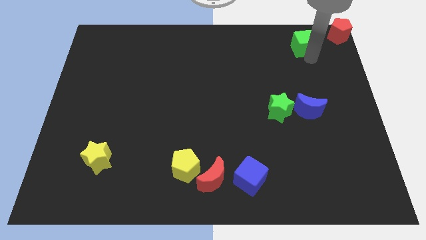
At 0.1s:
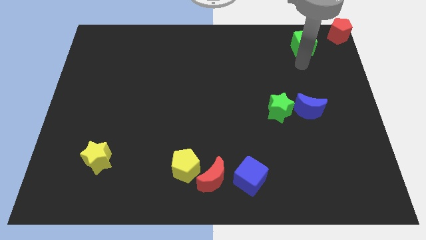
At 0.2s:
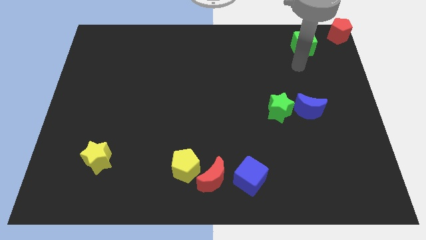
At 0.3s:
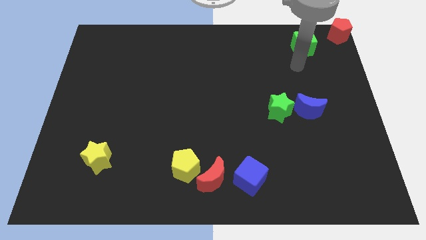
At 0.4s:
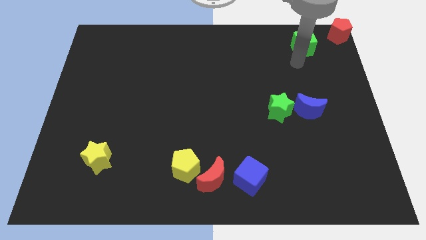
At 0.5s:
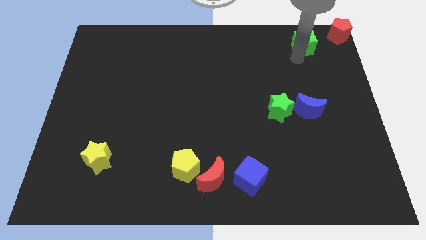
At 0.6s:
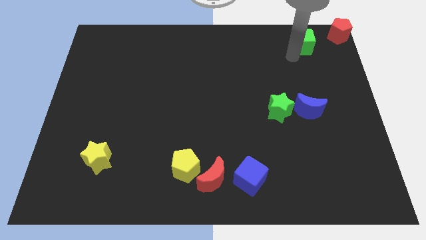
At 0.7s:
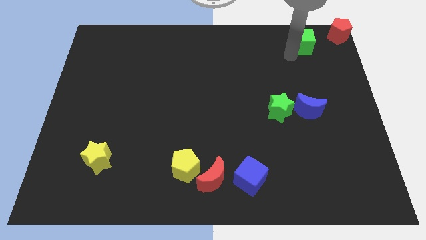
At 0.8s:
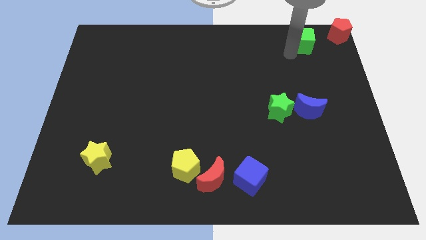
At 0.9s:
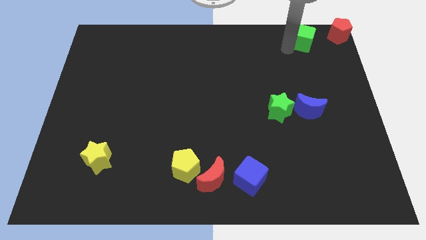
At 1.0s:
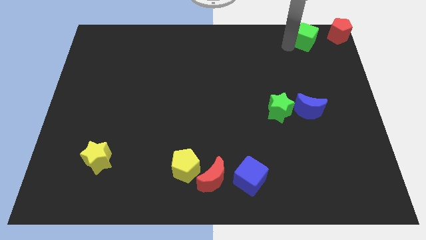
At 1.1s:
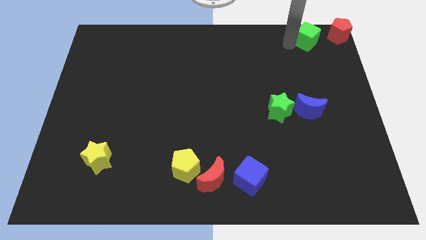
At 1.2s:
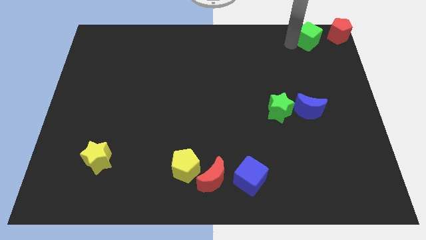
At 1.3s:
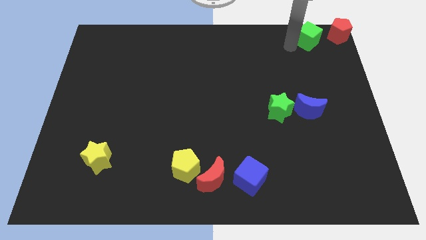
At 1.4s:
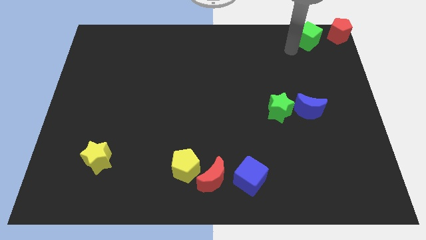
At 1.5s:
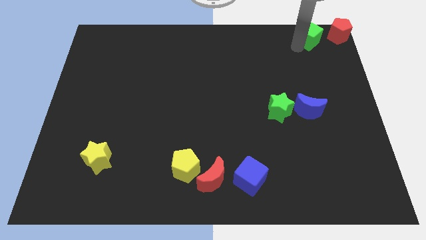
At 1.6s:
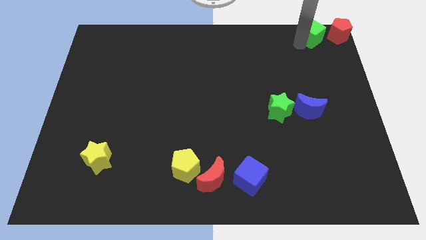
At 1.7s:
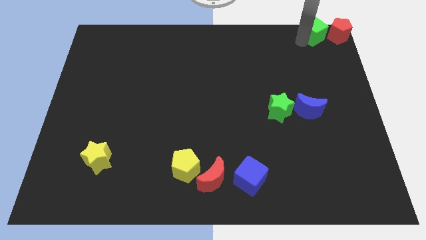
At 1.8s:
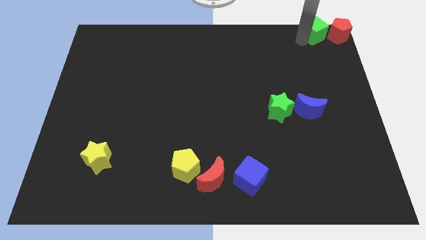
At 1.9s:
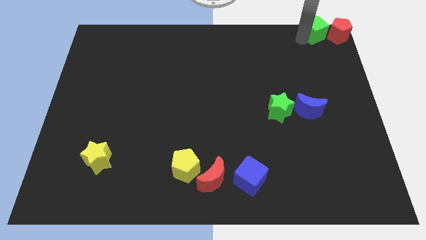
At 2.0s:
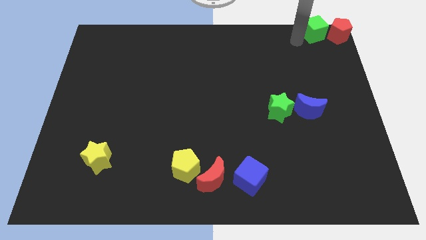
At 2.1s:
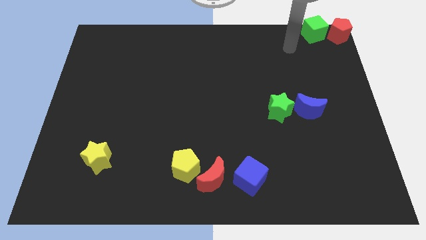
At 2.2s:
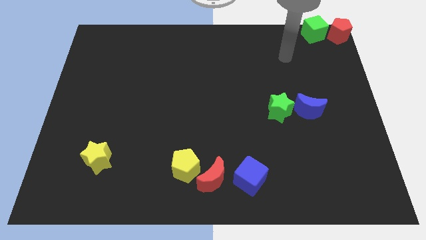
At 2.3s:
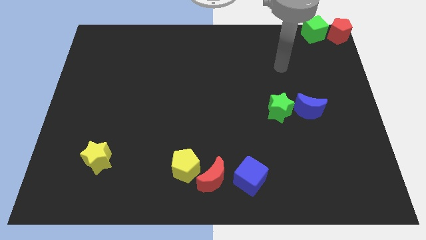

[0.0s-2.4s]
move the green cube to the left side of the red pentagon

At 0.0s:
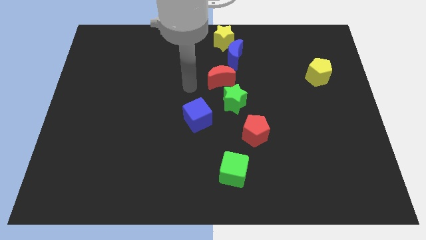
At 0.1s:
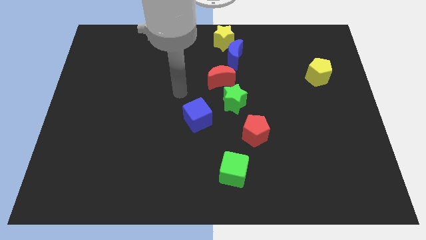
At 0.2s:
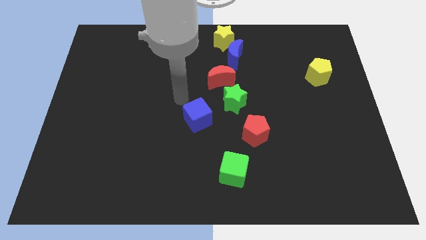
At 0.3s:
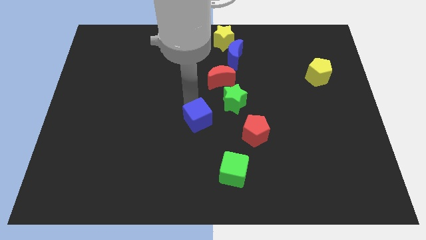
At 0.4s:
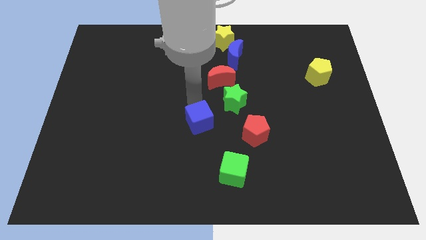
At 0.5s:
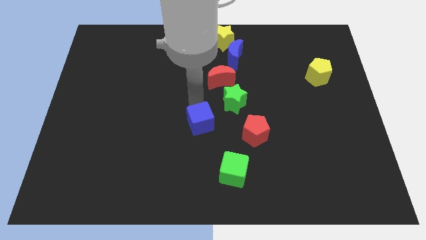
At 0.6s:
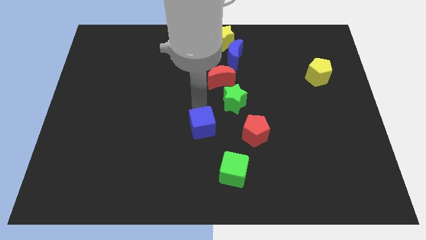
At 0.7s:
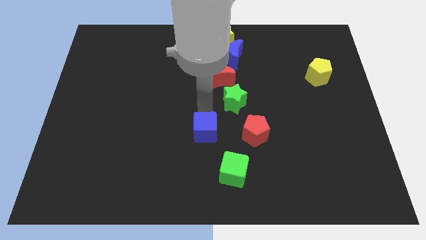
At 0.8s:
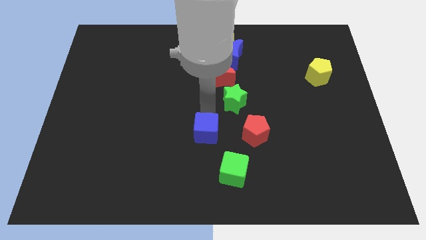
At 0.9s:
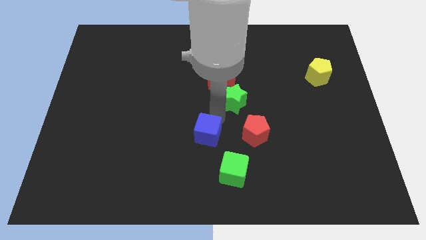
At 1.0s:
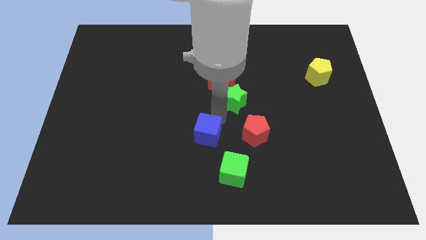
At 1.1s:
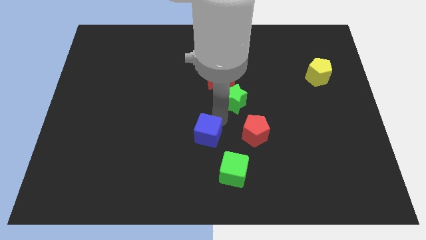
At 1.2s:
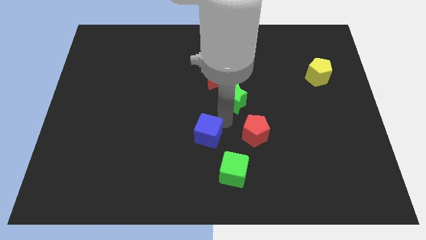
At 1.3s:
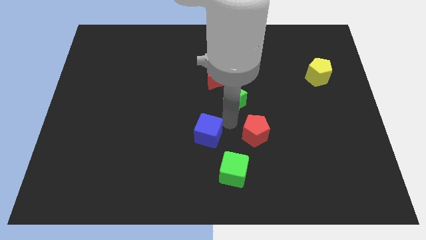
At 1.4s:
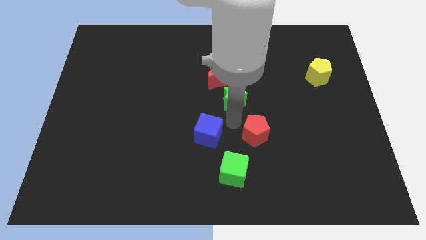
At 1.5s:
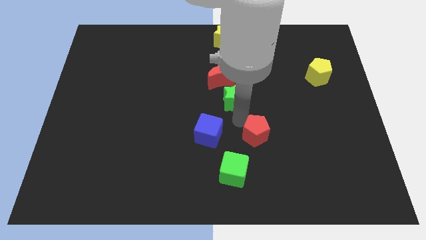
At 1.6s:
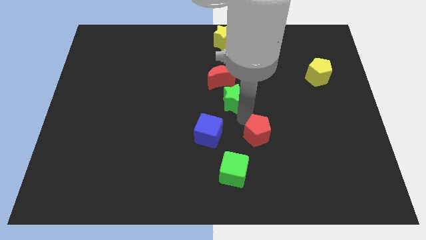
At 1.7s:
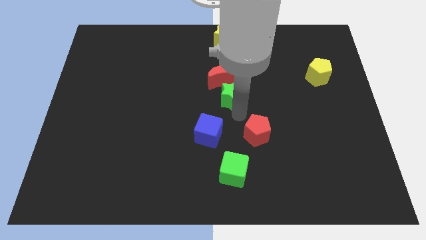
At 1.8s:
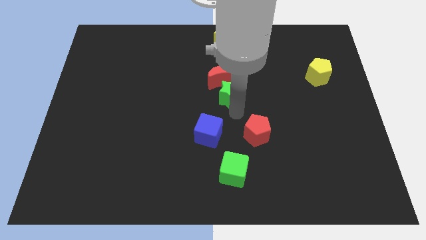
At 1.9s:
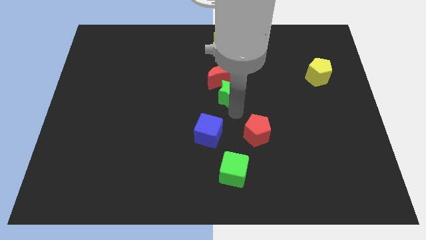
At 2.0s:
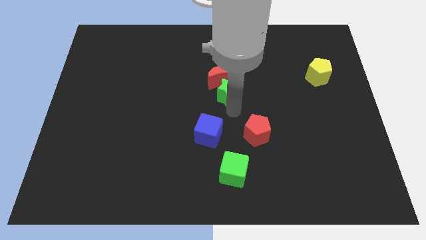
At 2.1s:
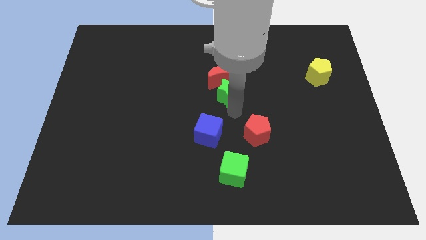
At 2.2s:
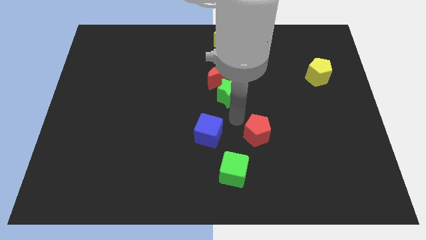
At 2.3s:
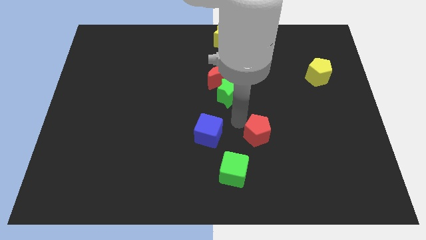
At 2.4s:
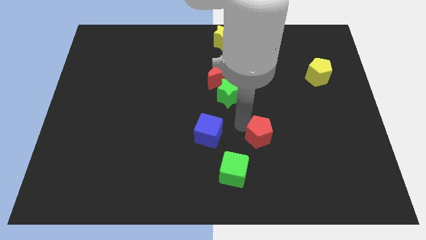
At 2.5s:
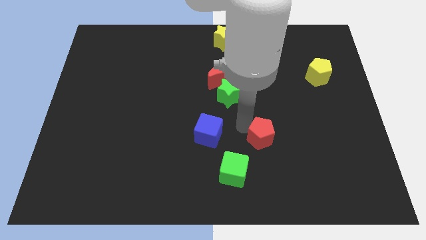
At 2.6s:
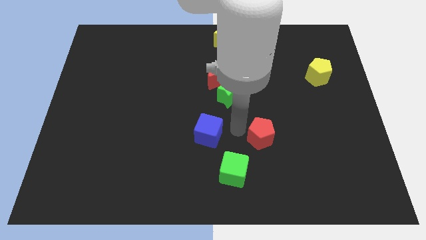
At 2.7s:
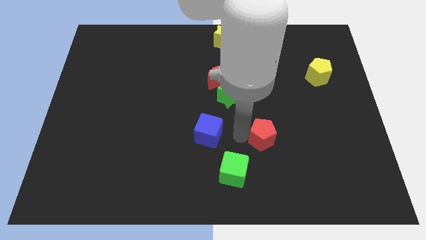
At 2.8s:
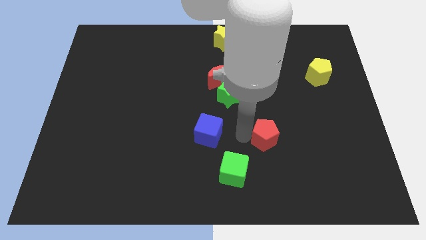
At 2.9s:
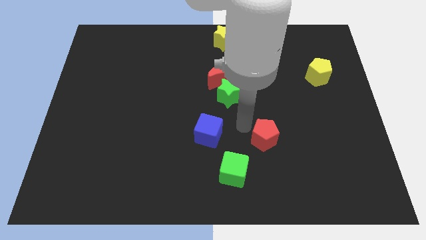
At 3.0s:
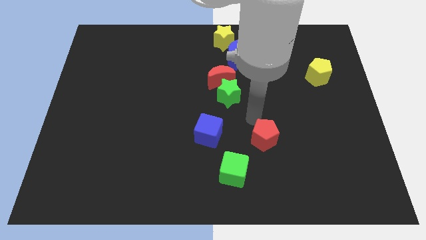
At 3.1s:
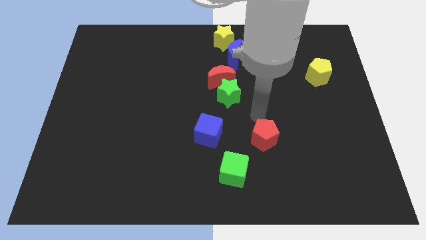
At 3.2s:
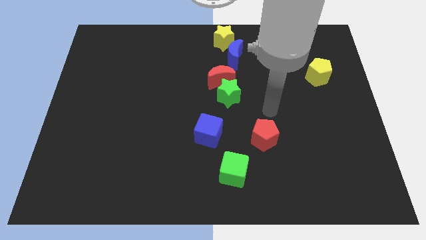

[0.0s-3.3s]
push blue block to the left top of the green block

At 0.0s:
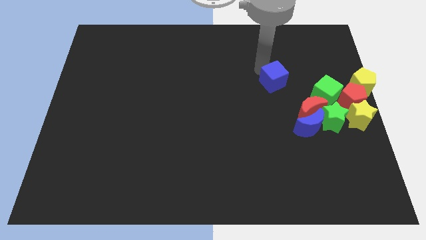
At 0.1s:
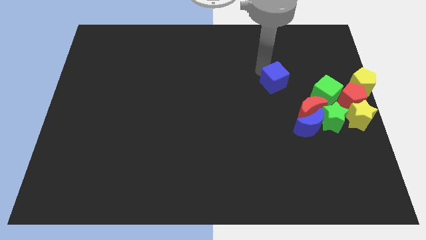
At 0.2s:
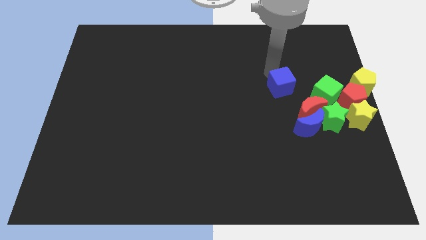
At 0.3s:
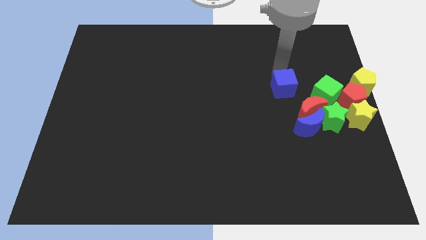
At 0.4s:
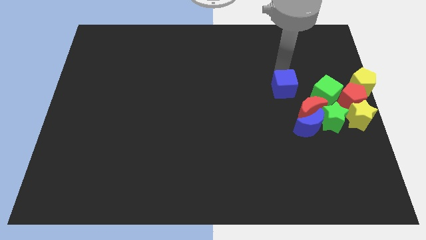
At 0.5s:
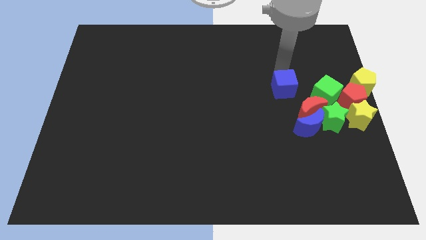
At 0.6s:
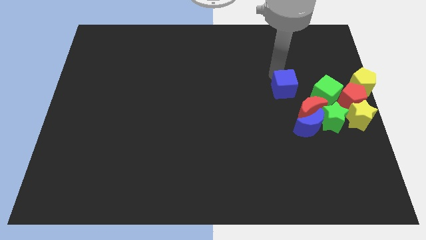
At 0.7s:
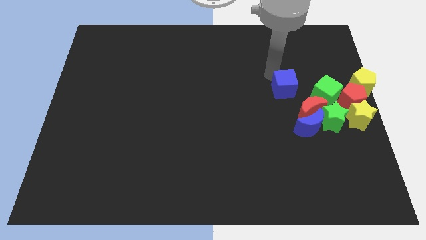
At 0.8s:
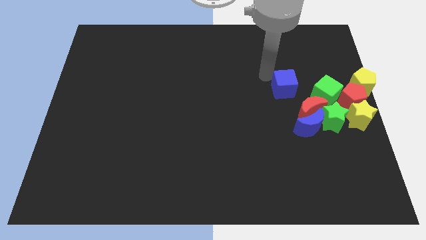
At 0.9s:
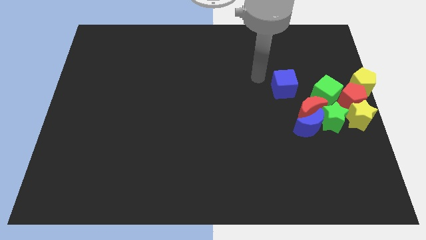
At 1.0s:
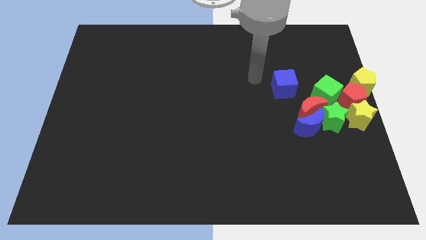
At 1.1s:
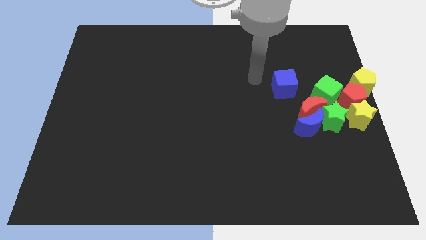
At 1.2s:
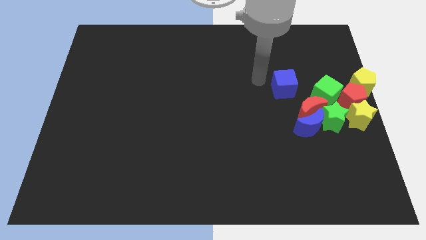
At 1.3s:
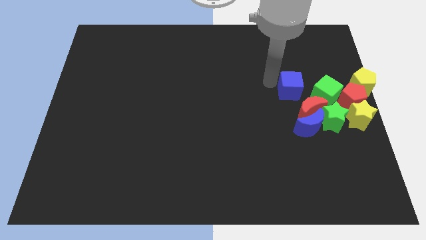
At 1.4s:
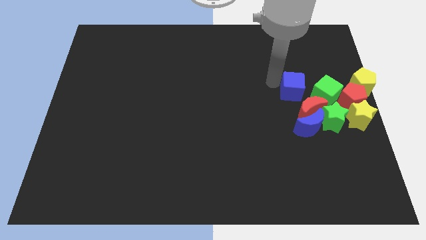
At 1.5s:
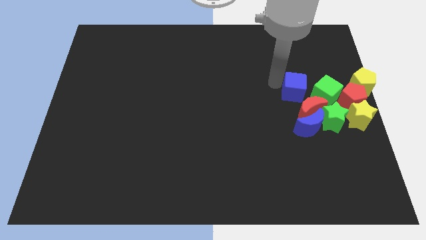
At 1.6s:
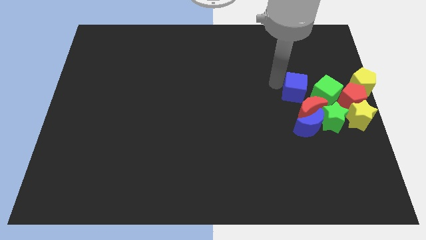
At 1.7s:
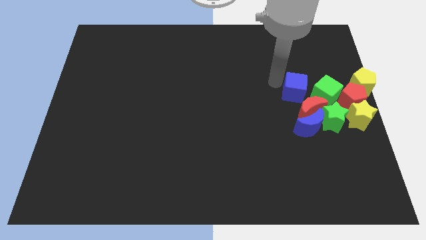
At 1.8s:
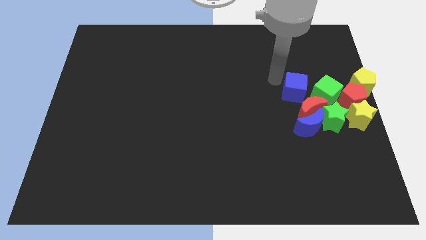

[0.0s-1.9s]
slide the blue cube slightly towards the other blocks

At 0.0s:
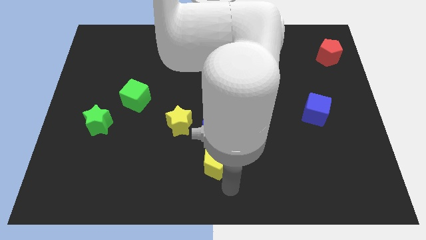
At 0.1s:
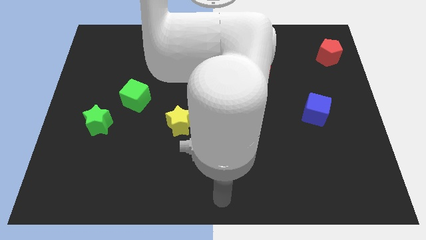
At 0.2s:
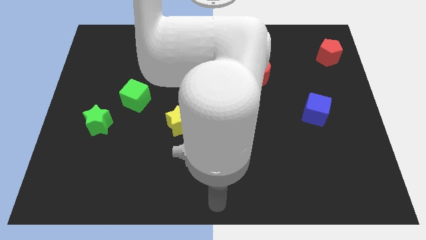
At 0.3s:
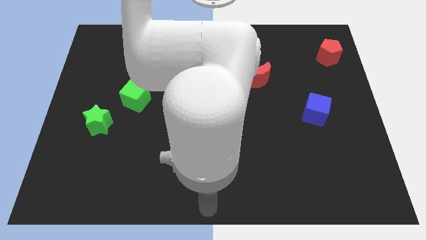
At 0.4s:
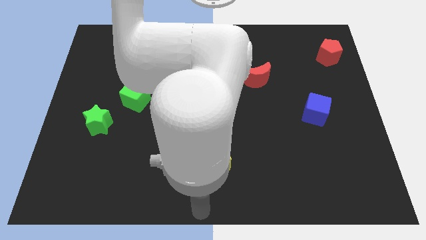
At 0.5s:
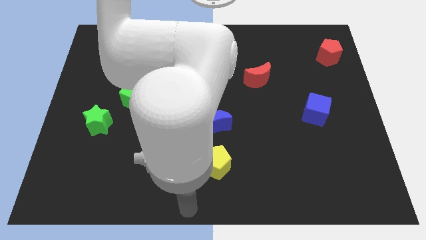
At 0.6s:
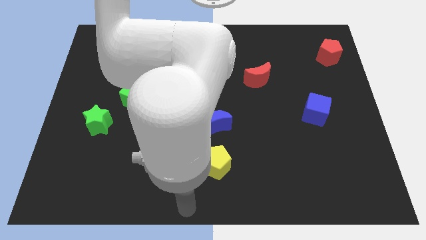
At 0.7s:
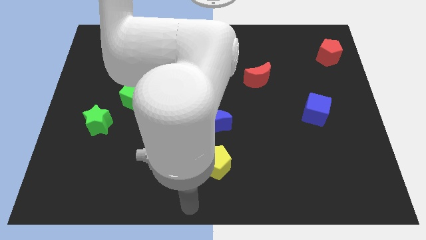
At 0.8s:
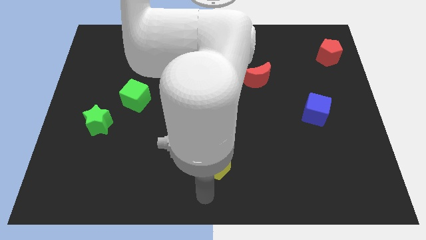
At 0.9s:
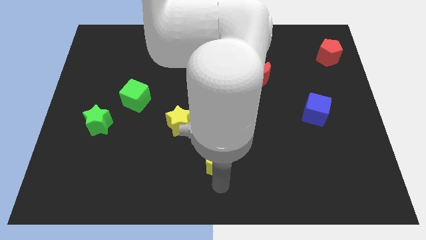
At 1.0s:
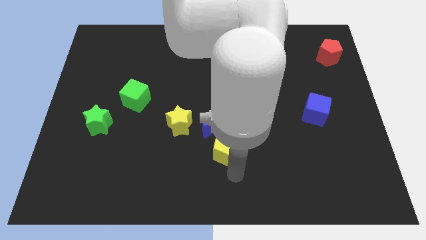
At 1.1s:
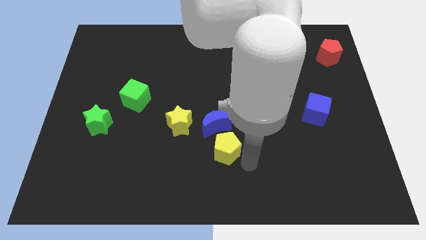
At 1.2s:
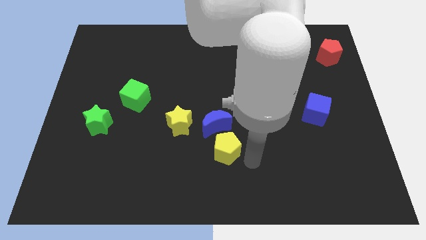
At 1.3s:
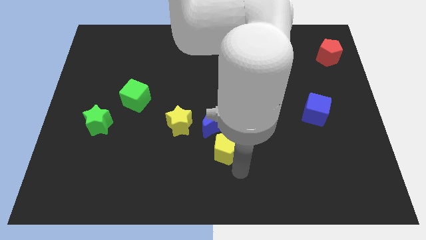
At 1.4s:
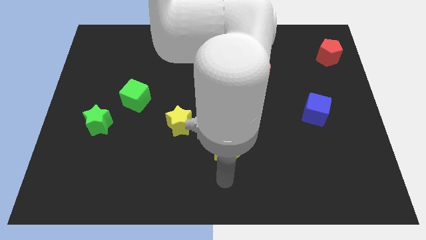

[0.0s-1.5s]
push yellow pentagon upwards
